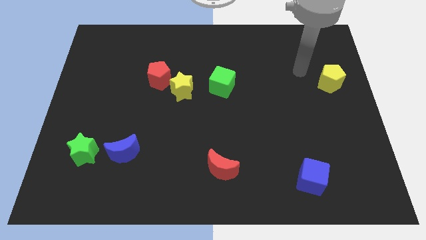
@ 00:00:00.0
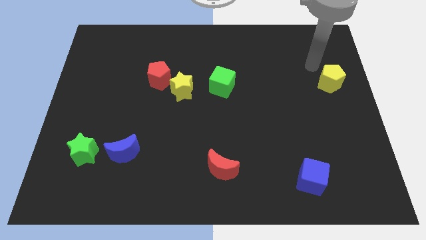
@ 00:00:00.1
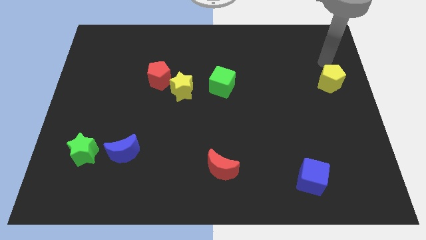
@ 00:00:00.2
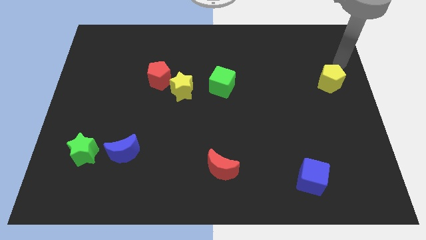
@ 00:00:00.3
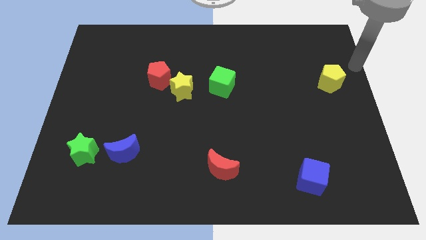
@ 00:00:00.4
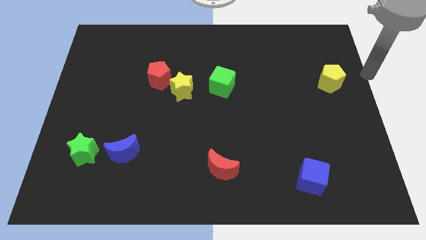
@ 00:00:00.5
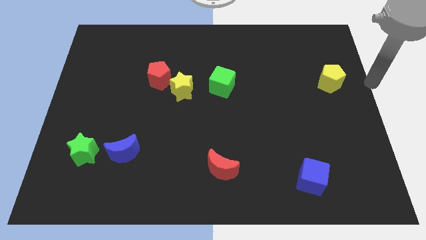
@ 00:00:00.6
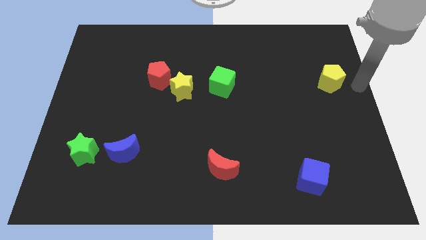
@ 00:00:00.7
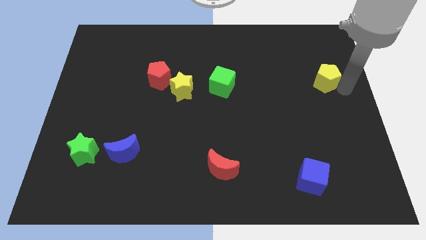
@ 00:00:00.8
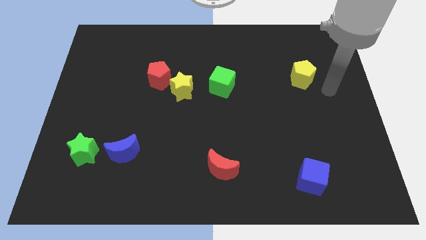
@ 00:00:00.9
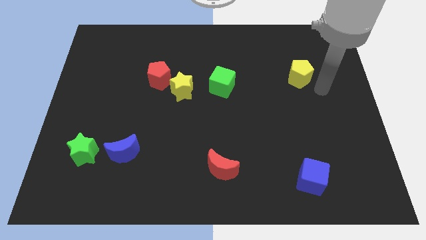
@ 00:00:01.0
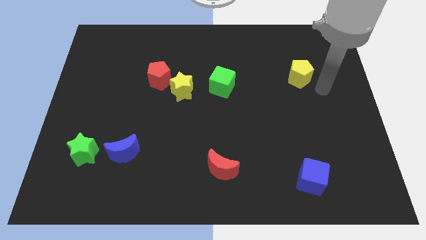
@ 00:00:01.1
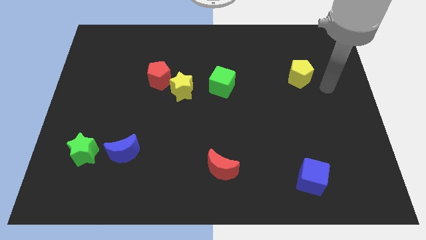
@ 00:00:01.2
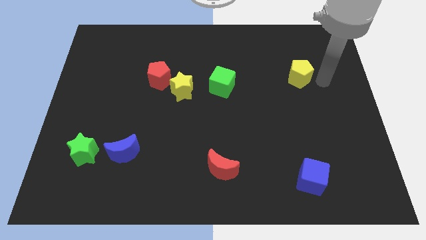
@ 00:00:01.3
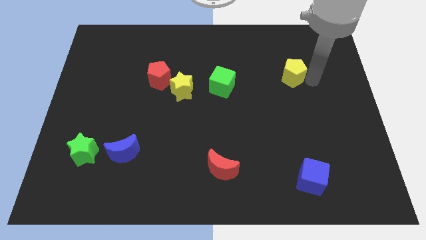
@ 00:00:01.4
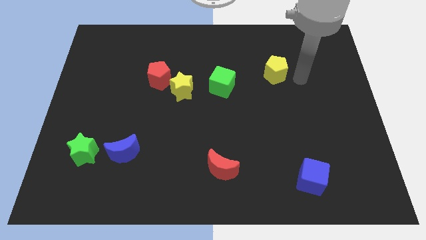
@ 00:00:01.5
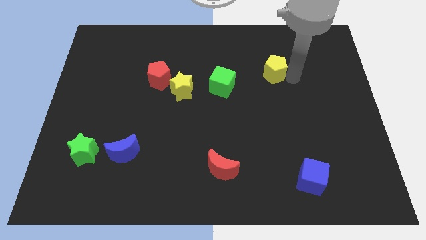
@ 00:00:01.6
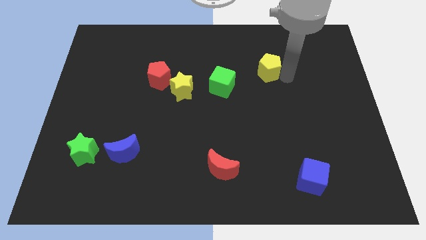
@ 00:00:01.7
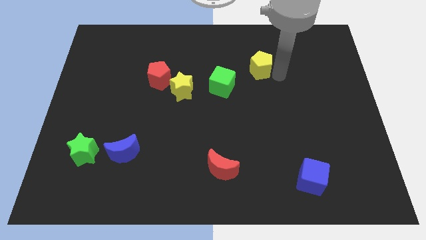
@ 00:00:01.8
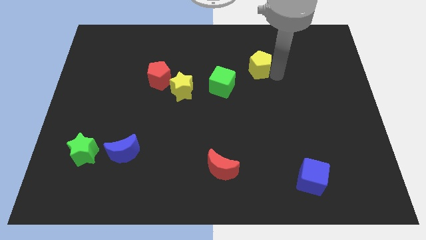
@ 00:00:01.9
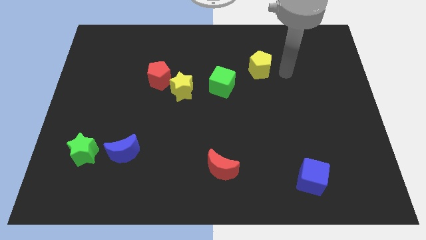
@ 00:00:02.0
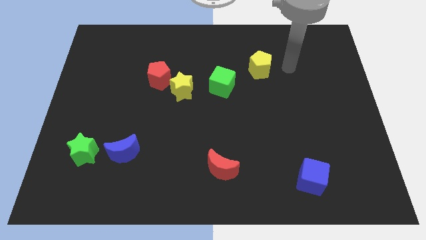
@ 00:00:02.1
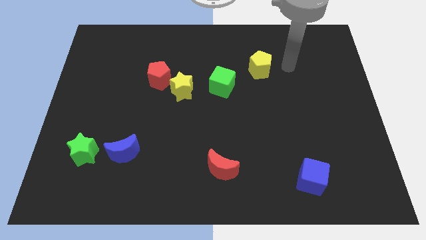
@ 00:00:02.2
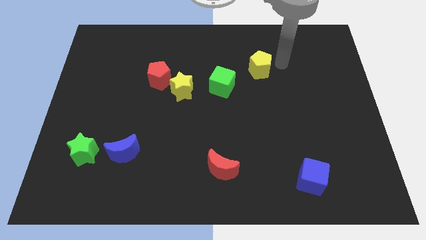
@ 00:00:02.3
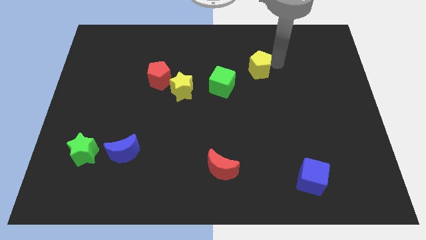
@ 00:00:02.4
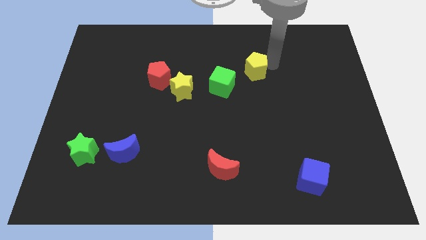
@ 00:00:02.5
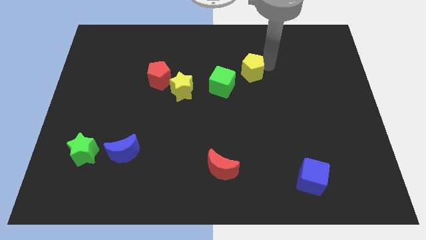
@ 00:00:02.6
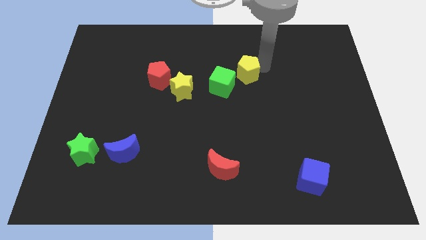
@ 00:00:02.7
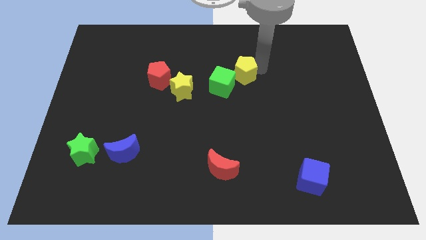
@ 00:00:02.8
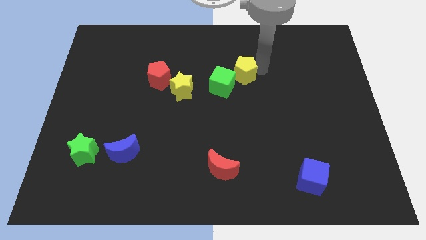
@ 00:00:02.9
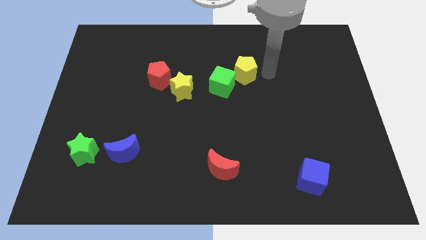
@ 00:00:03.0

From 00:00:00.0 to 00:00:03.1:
move the yellow pentagon close to the top right of the green cube

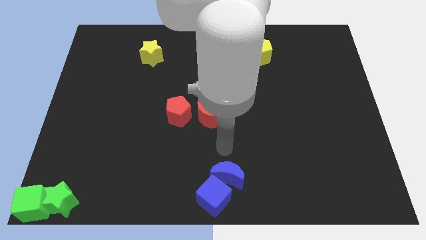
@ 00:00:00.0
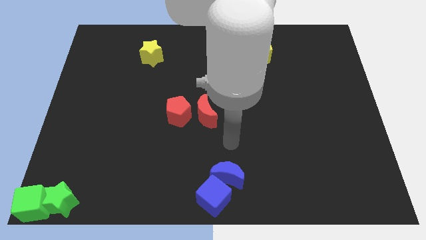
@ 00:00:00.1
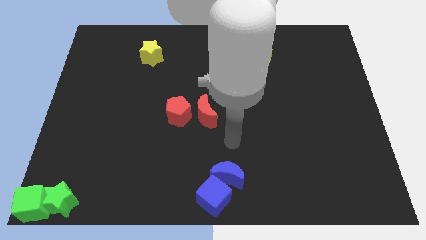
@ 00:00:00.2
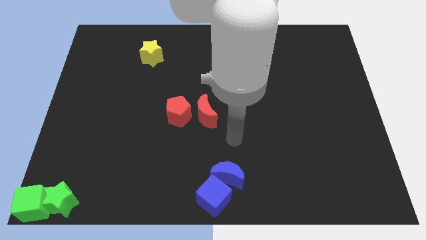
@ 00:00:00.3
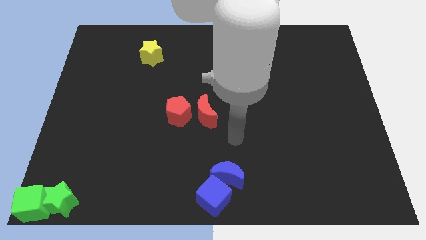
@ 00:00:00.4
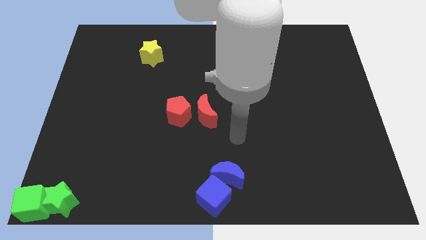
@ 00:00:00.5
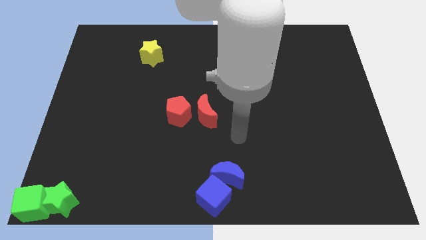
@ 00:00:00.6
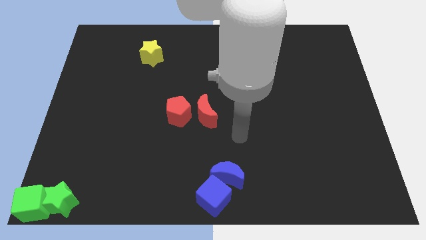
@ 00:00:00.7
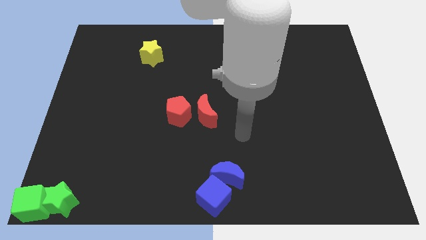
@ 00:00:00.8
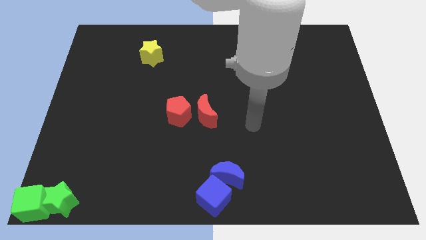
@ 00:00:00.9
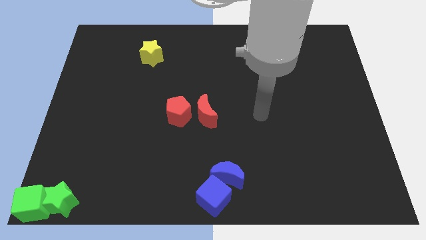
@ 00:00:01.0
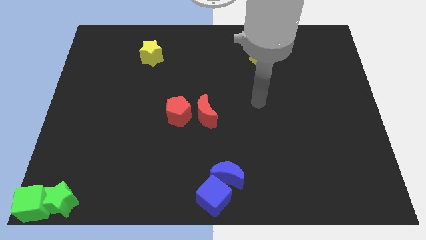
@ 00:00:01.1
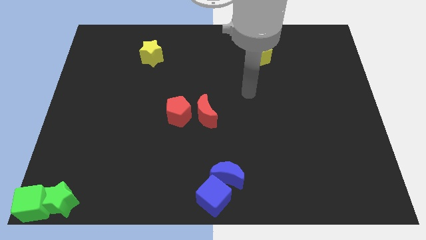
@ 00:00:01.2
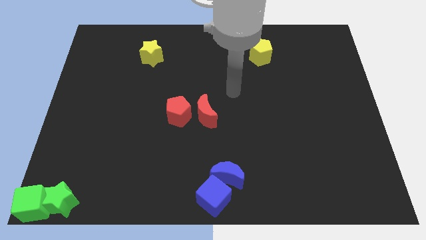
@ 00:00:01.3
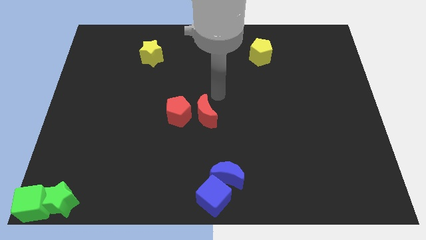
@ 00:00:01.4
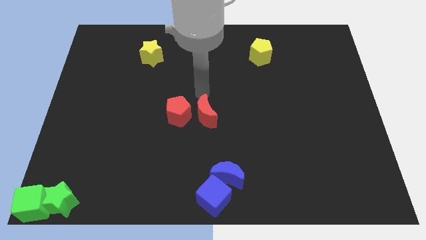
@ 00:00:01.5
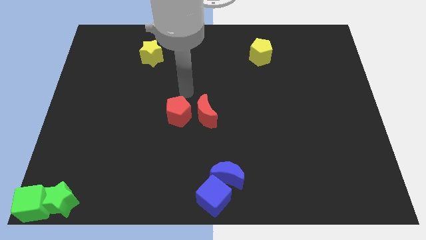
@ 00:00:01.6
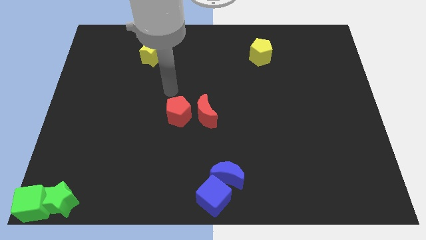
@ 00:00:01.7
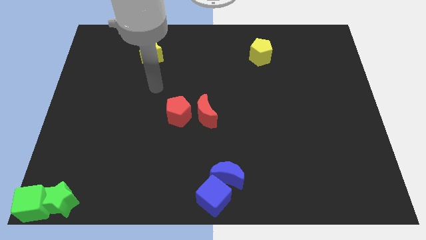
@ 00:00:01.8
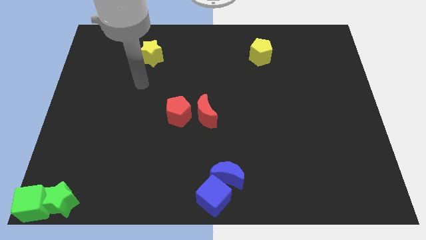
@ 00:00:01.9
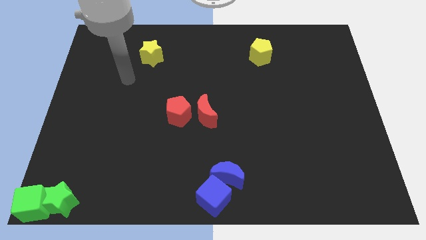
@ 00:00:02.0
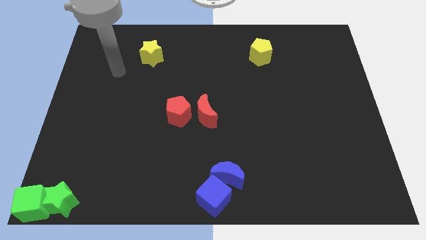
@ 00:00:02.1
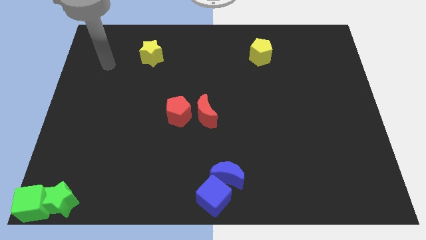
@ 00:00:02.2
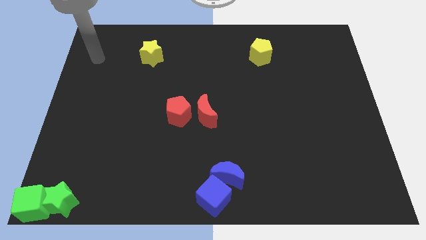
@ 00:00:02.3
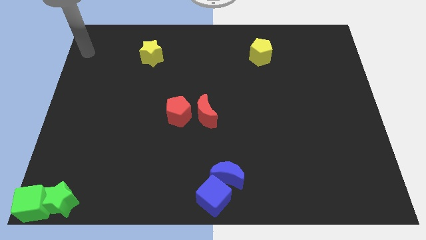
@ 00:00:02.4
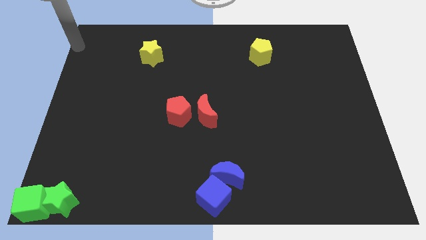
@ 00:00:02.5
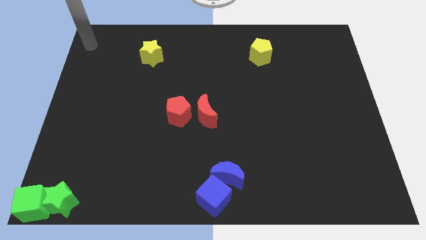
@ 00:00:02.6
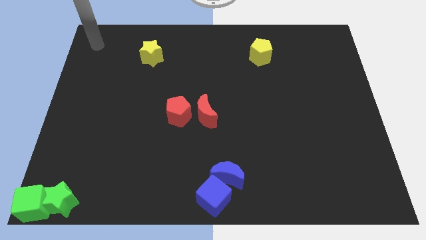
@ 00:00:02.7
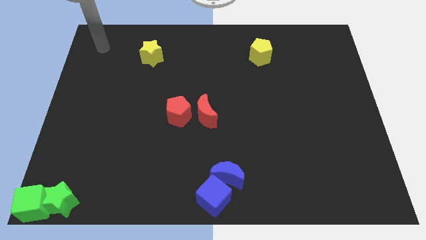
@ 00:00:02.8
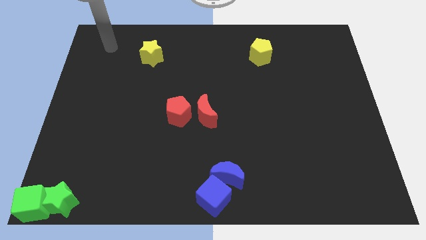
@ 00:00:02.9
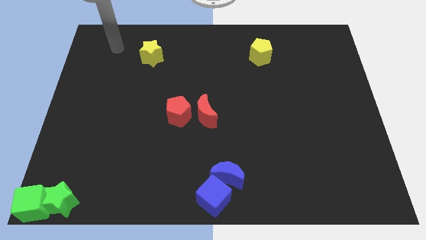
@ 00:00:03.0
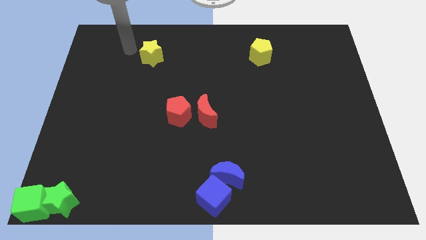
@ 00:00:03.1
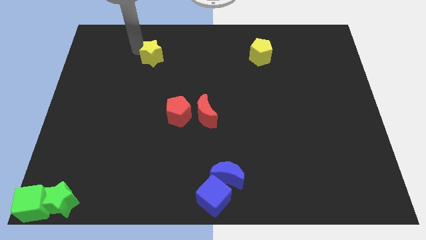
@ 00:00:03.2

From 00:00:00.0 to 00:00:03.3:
move your arm from the top of the blue crescent to the left of the yellow star

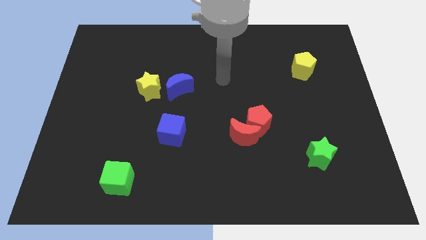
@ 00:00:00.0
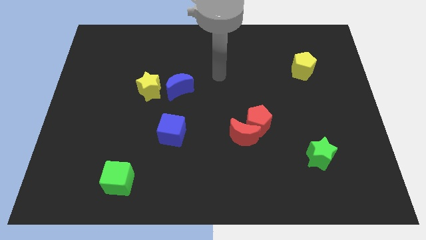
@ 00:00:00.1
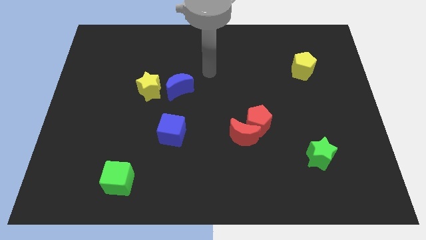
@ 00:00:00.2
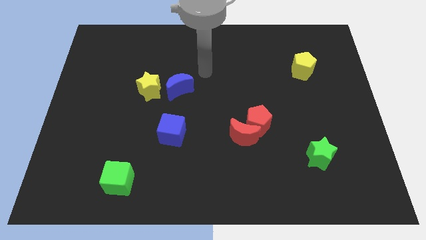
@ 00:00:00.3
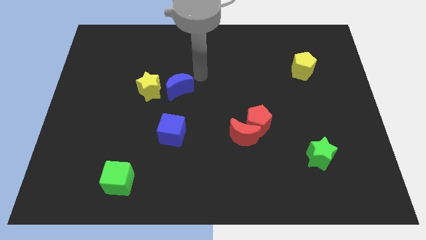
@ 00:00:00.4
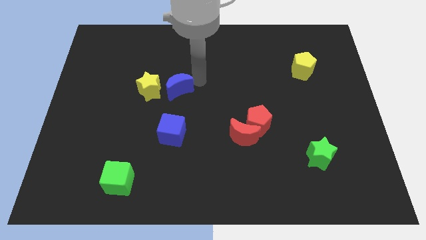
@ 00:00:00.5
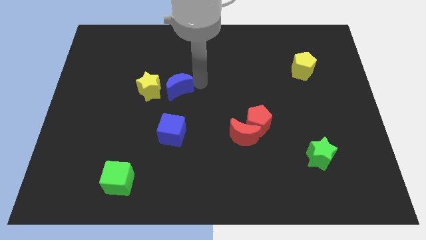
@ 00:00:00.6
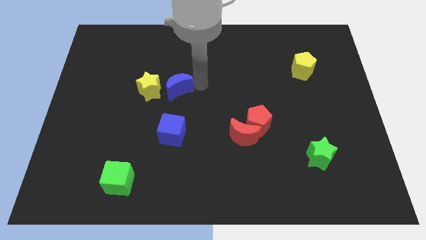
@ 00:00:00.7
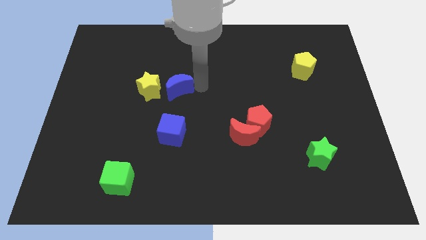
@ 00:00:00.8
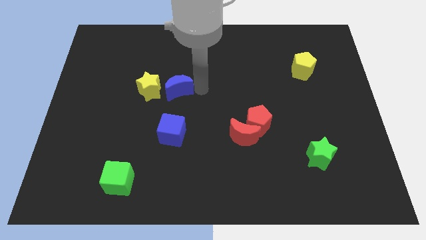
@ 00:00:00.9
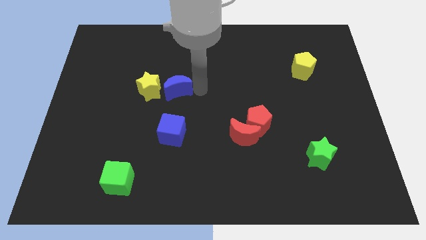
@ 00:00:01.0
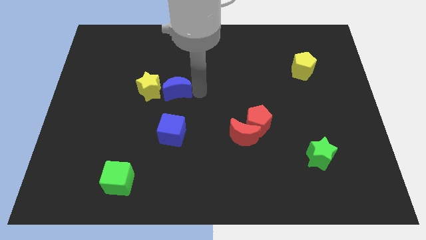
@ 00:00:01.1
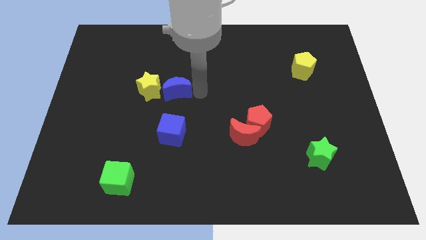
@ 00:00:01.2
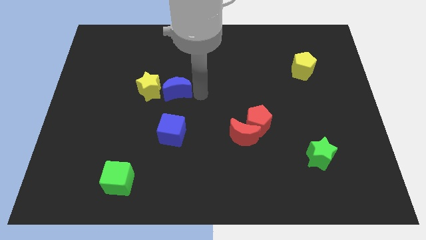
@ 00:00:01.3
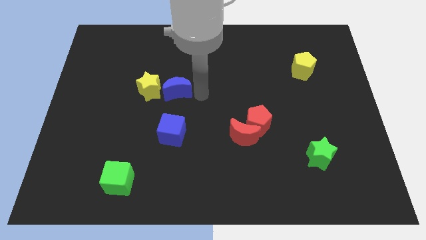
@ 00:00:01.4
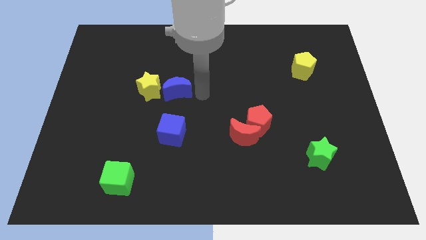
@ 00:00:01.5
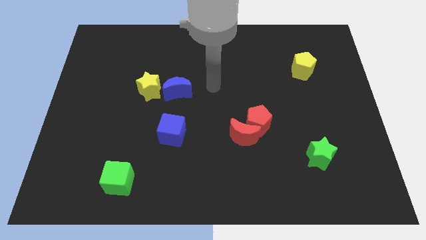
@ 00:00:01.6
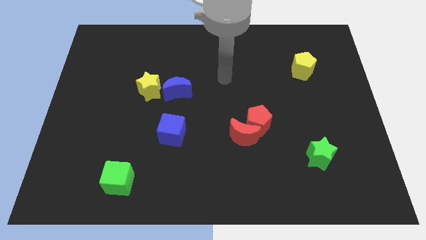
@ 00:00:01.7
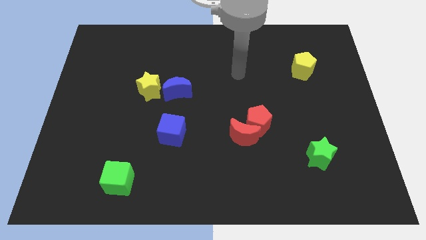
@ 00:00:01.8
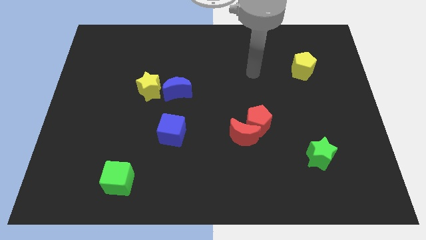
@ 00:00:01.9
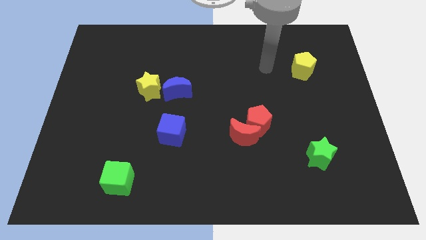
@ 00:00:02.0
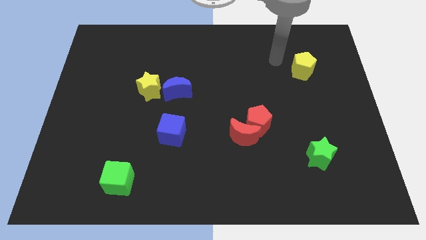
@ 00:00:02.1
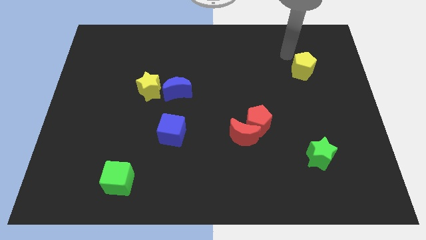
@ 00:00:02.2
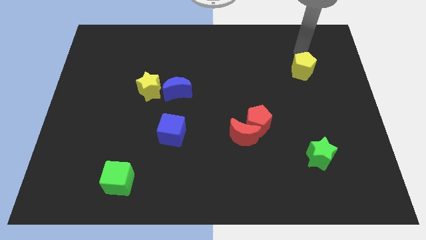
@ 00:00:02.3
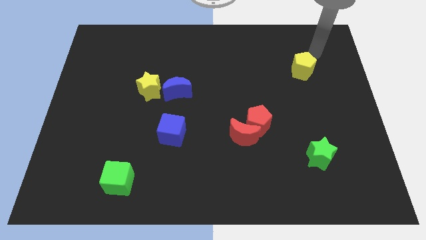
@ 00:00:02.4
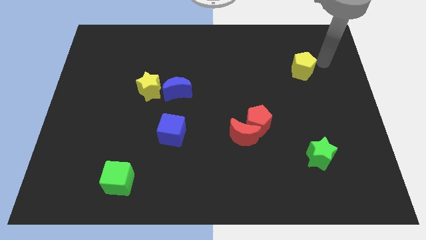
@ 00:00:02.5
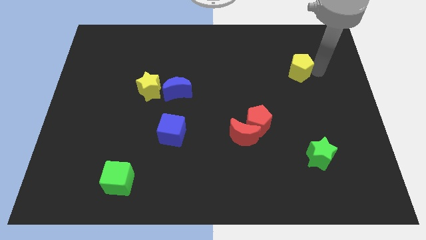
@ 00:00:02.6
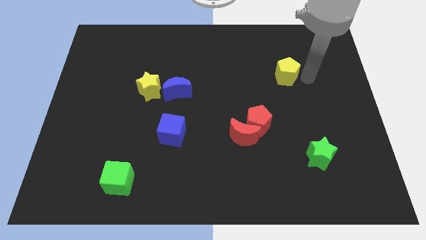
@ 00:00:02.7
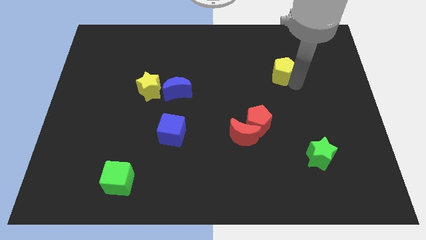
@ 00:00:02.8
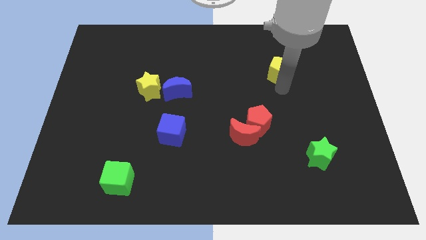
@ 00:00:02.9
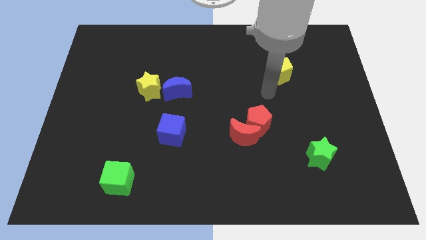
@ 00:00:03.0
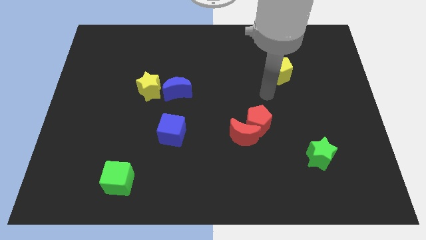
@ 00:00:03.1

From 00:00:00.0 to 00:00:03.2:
push the yellow pentagon slightly towards bottom
